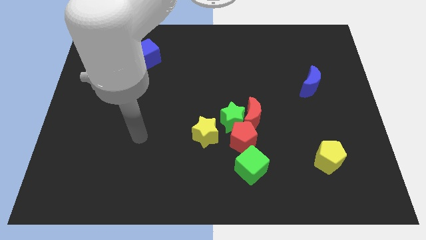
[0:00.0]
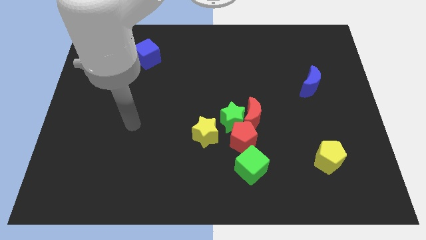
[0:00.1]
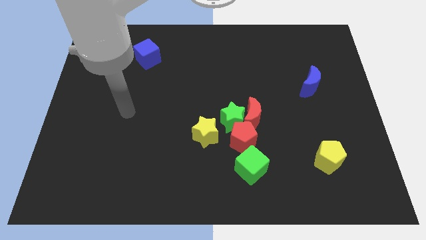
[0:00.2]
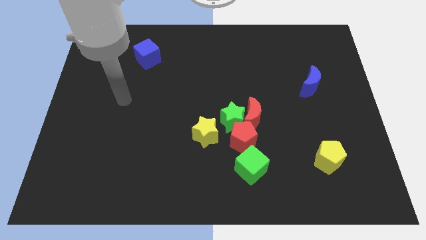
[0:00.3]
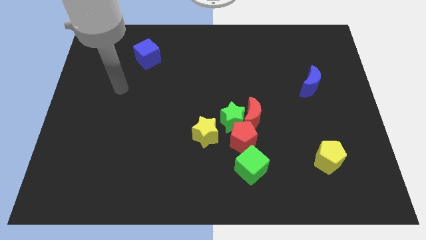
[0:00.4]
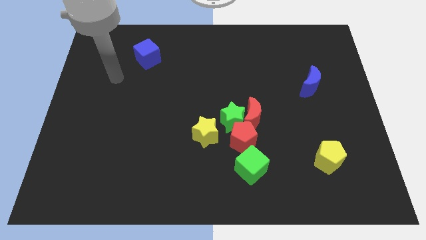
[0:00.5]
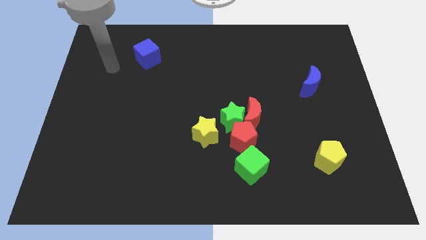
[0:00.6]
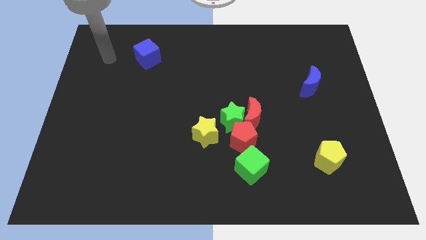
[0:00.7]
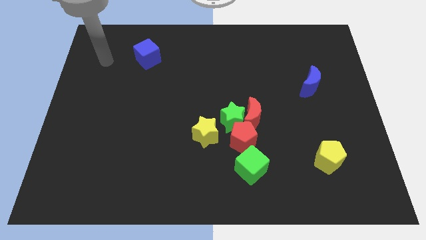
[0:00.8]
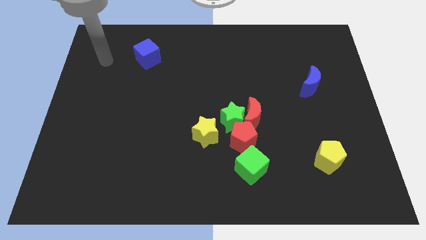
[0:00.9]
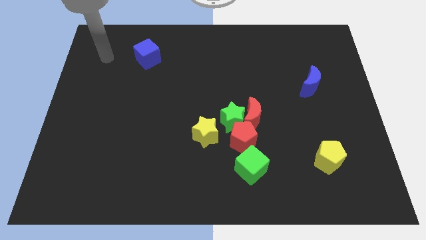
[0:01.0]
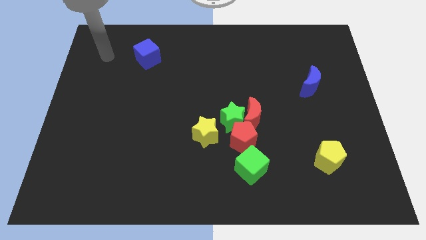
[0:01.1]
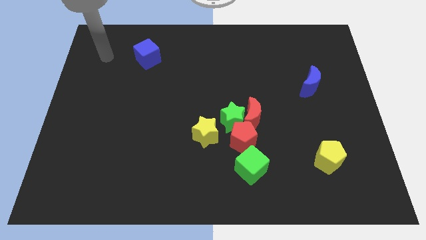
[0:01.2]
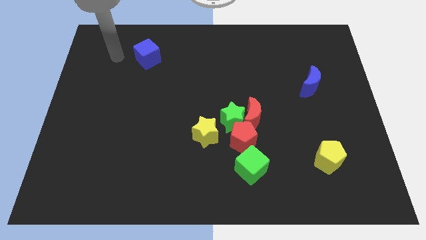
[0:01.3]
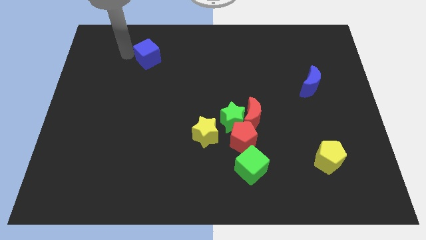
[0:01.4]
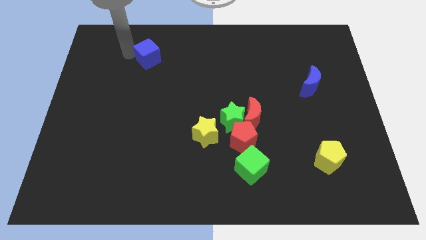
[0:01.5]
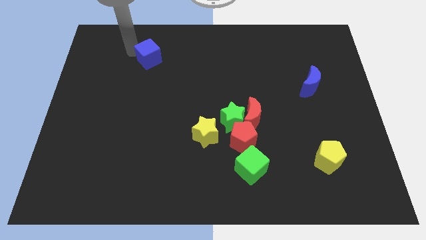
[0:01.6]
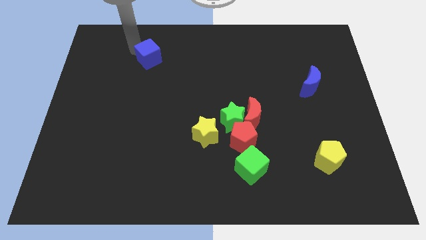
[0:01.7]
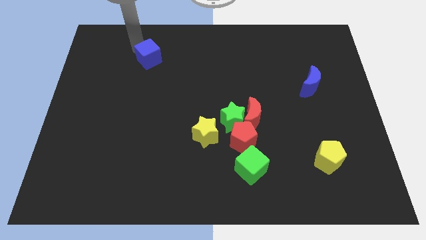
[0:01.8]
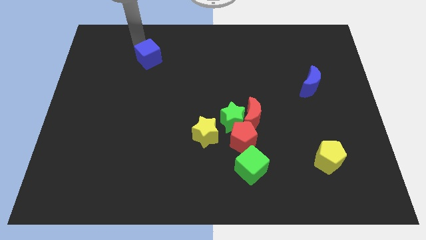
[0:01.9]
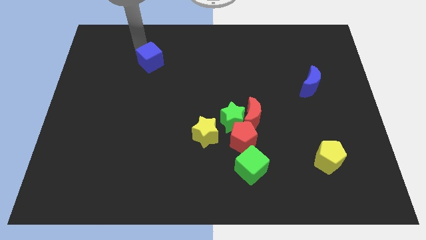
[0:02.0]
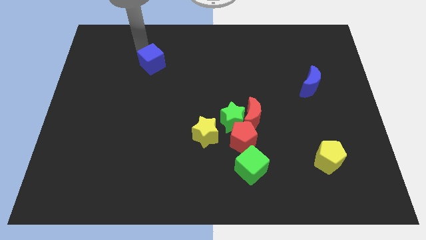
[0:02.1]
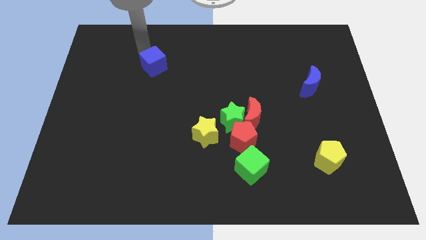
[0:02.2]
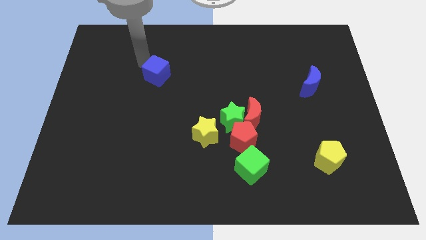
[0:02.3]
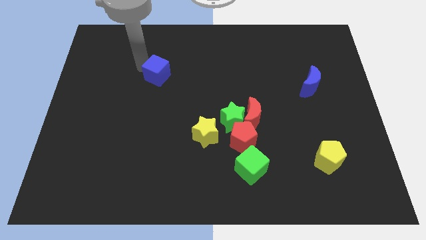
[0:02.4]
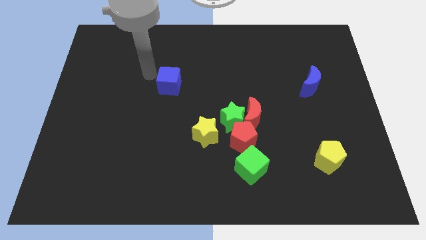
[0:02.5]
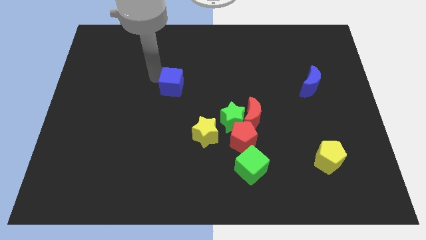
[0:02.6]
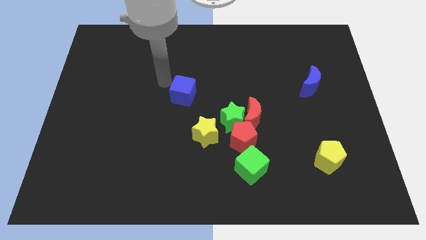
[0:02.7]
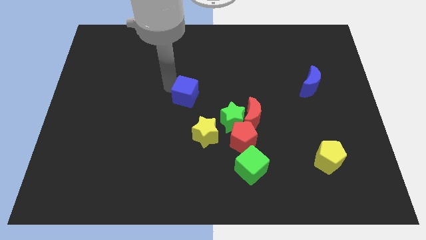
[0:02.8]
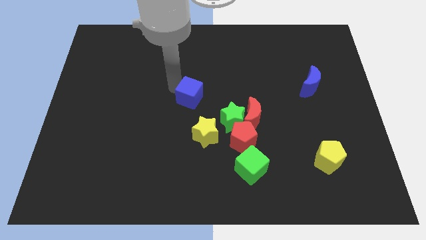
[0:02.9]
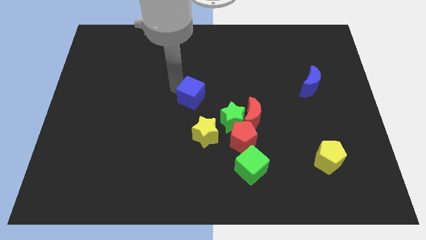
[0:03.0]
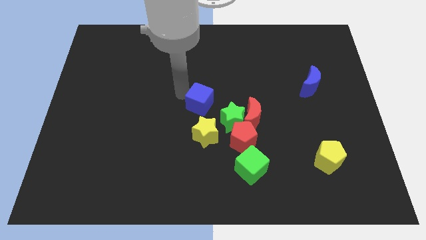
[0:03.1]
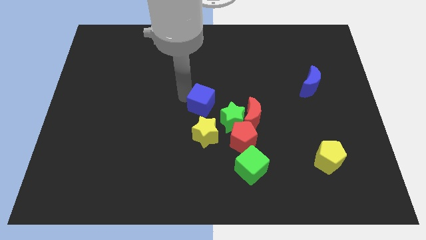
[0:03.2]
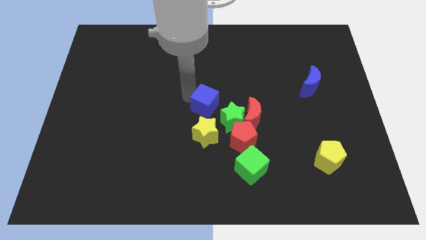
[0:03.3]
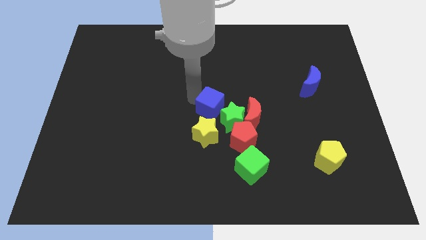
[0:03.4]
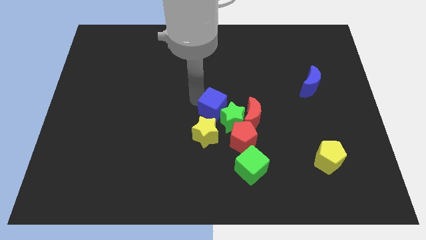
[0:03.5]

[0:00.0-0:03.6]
place the blue cube at the center of the board

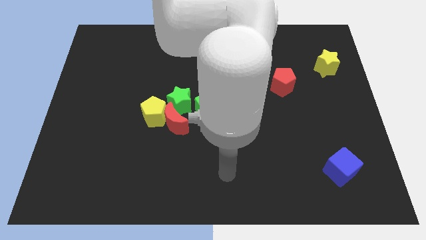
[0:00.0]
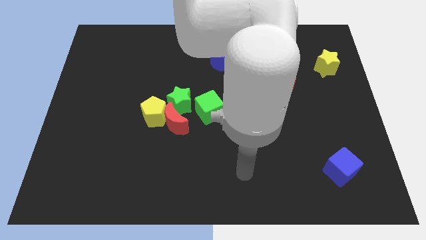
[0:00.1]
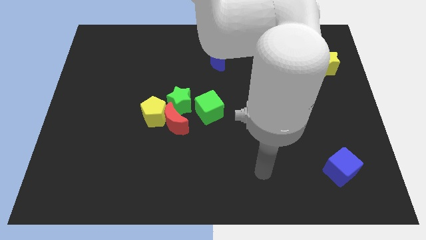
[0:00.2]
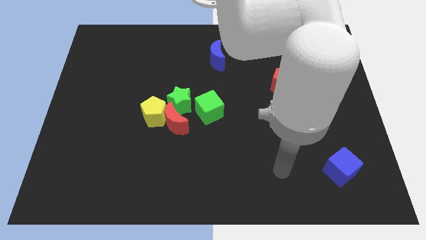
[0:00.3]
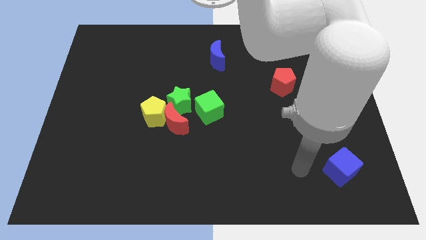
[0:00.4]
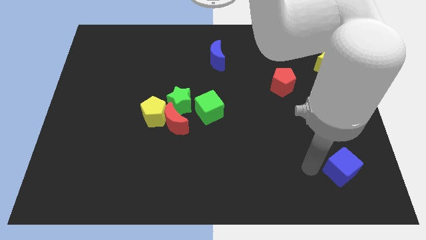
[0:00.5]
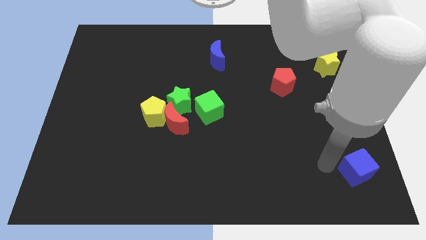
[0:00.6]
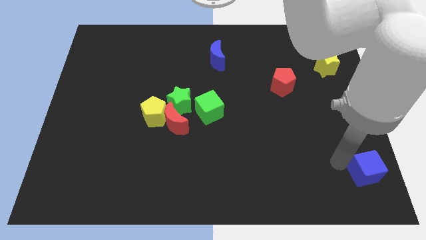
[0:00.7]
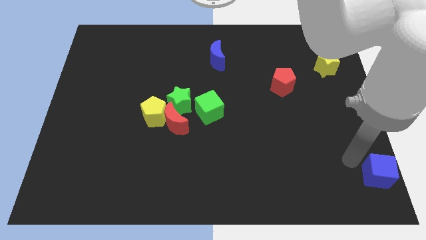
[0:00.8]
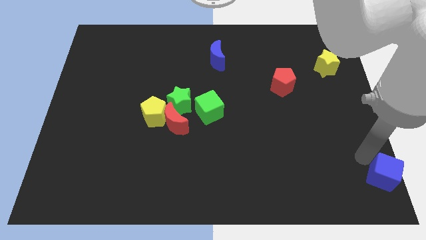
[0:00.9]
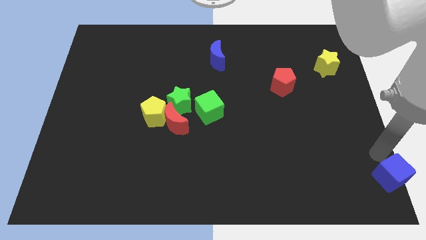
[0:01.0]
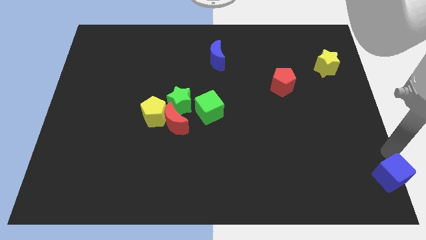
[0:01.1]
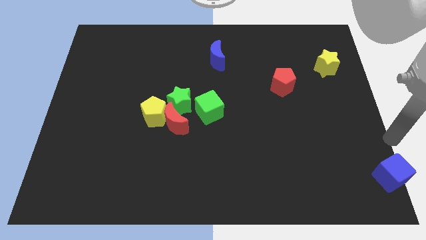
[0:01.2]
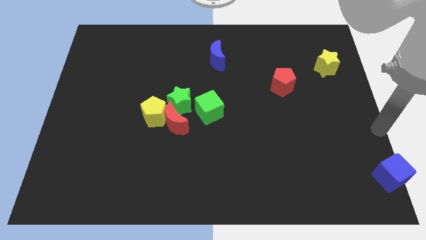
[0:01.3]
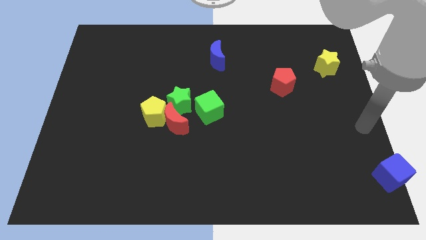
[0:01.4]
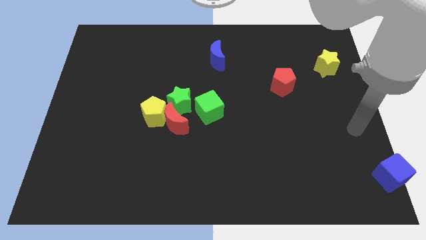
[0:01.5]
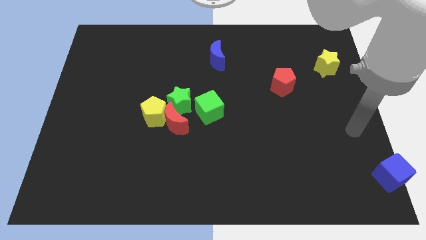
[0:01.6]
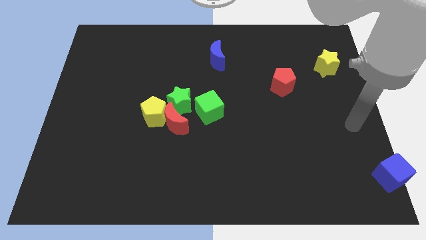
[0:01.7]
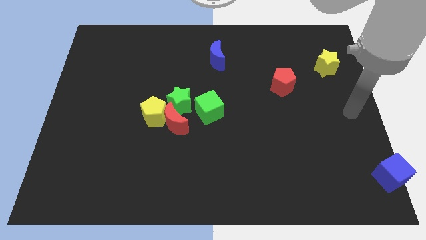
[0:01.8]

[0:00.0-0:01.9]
push the blue cube towards the towards the bottom right side of the board

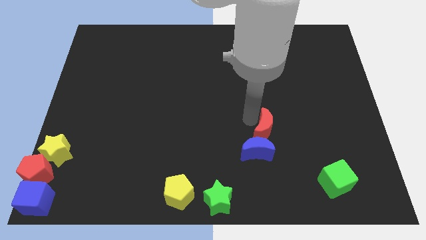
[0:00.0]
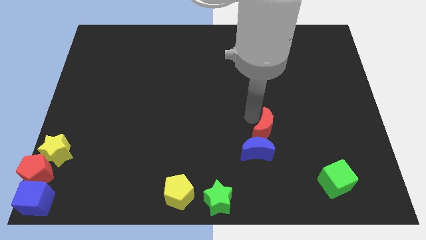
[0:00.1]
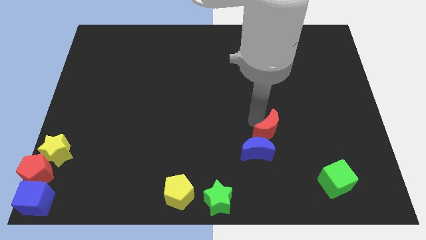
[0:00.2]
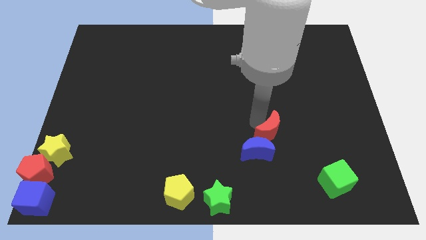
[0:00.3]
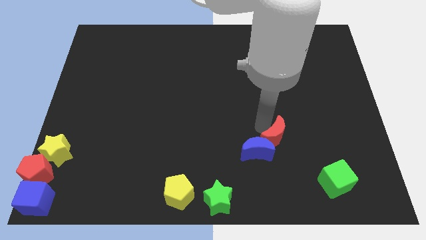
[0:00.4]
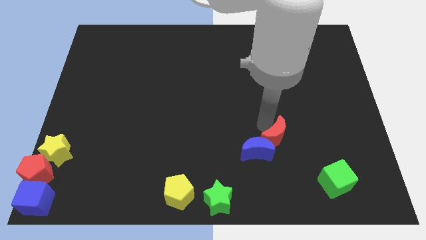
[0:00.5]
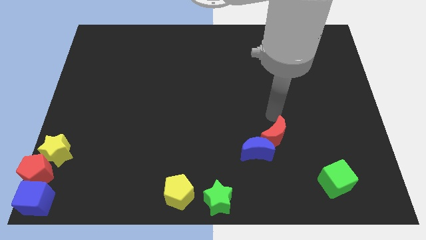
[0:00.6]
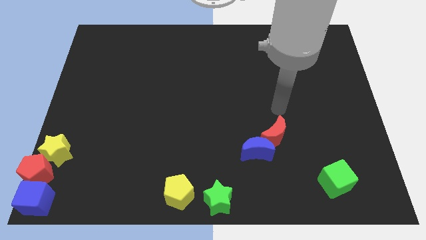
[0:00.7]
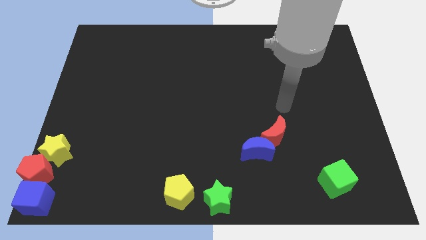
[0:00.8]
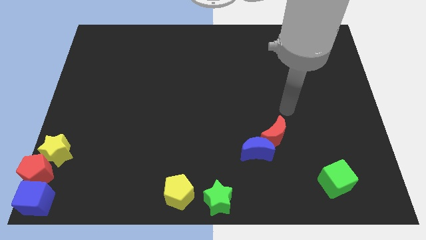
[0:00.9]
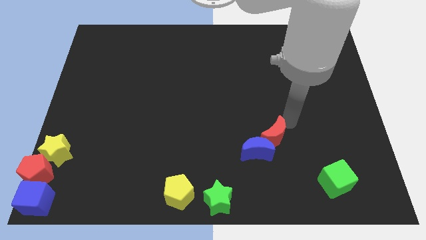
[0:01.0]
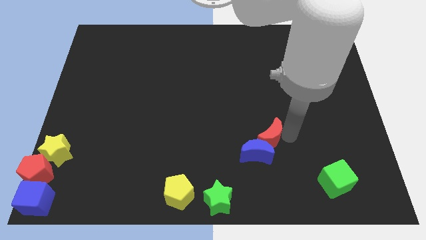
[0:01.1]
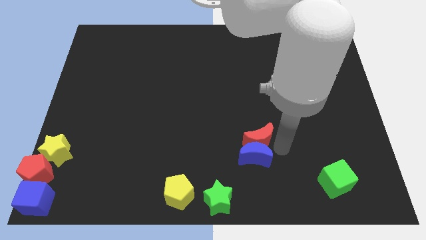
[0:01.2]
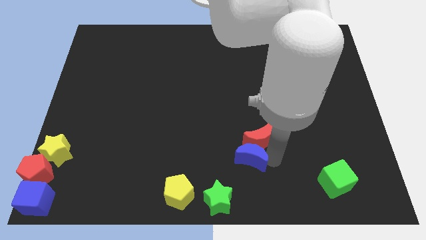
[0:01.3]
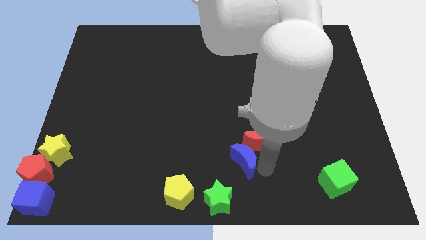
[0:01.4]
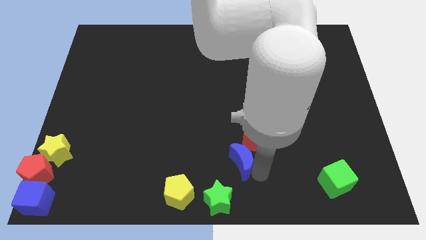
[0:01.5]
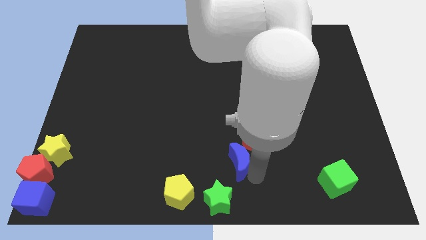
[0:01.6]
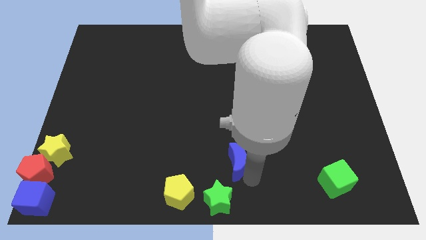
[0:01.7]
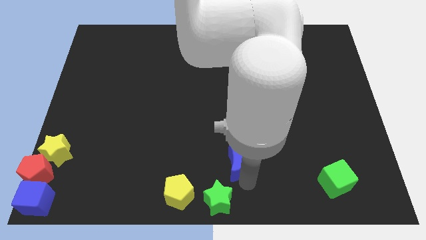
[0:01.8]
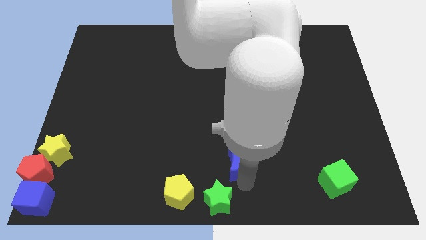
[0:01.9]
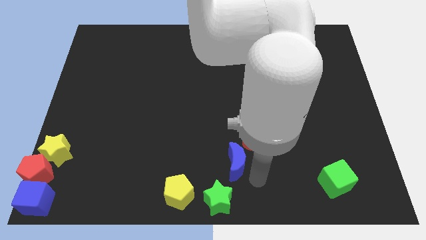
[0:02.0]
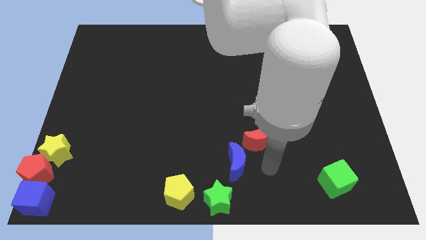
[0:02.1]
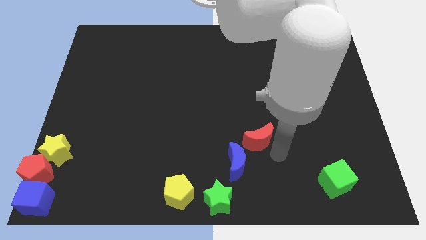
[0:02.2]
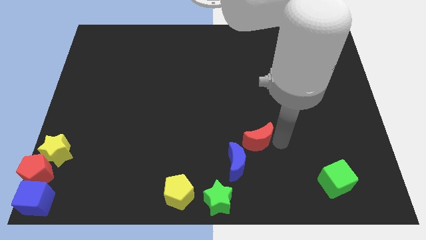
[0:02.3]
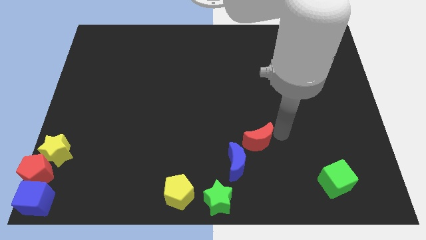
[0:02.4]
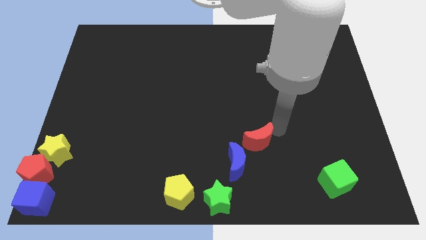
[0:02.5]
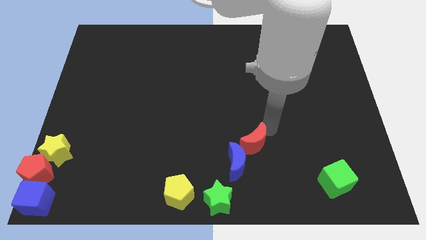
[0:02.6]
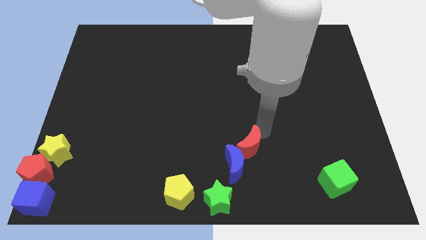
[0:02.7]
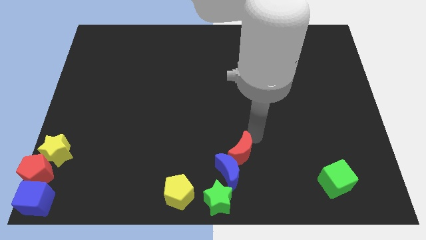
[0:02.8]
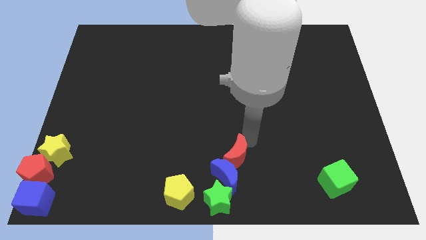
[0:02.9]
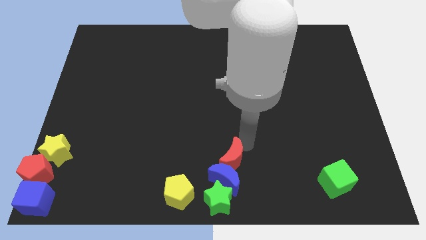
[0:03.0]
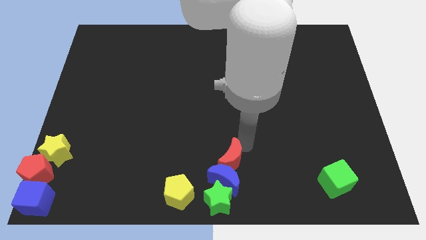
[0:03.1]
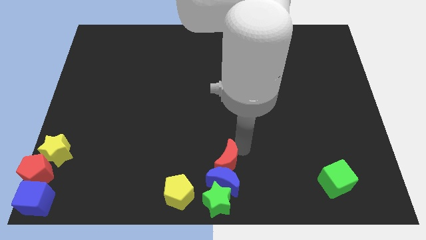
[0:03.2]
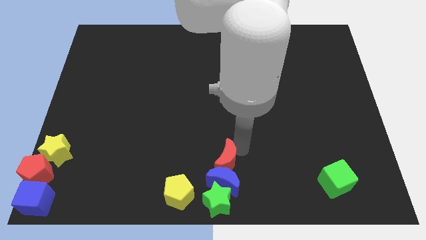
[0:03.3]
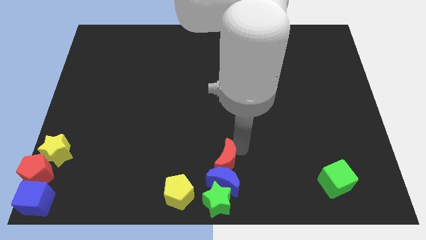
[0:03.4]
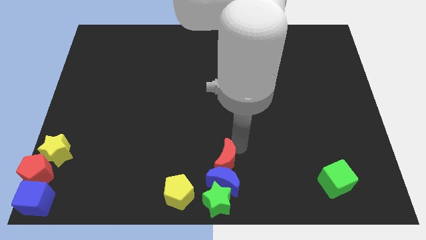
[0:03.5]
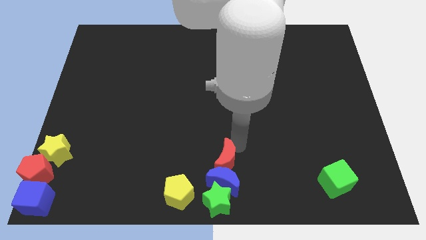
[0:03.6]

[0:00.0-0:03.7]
drag the red ctrscent and blue crescent into the top side of the green star
